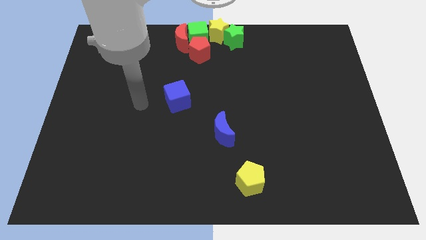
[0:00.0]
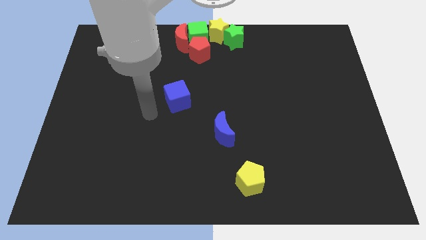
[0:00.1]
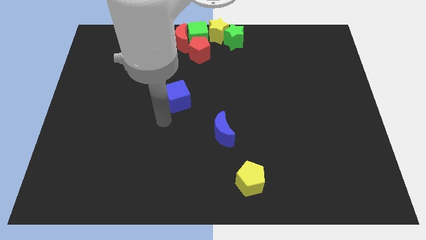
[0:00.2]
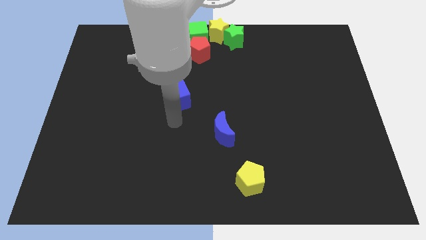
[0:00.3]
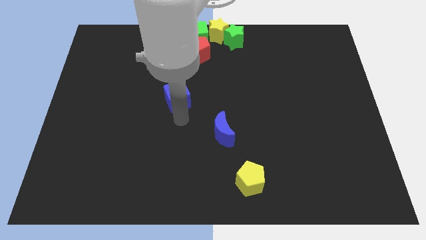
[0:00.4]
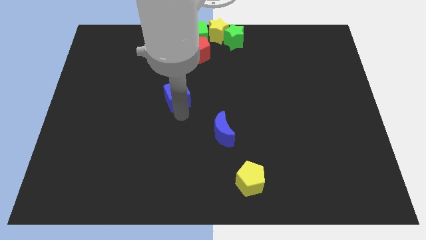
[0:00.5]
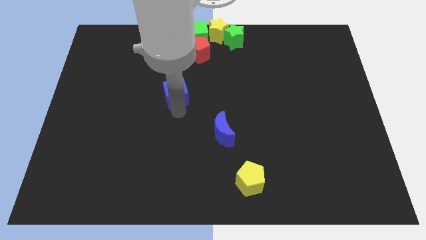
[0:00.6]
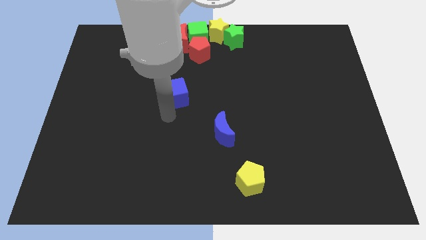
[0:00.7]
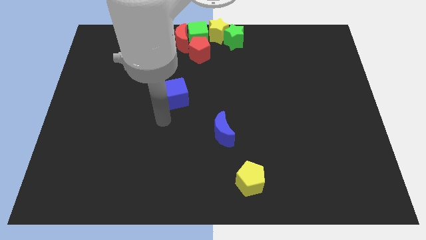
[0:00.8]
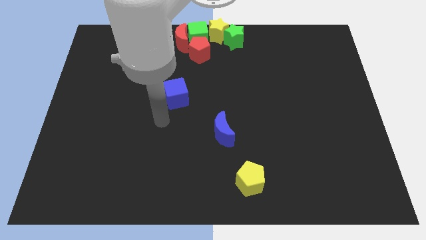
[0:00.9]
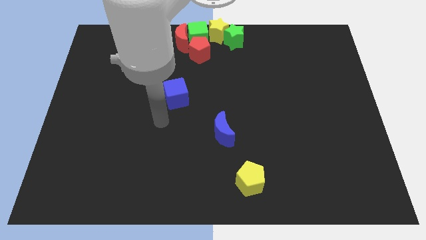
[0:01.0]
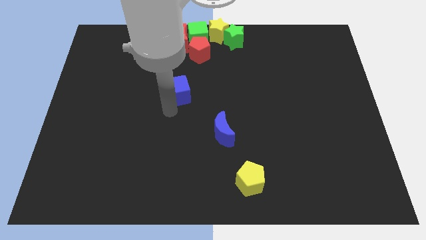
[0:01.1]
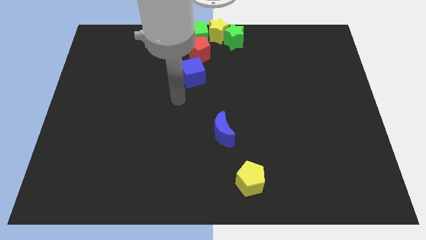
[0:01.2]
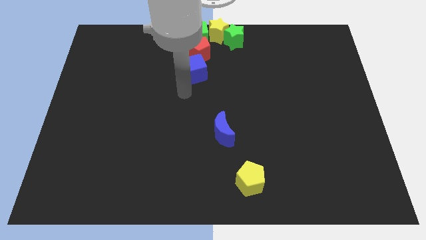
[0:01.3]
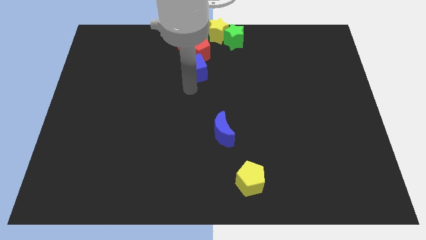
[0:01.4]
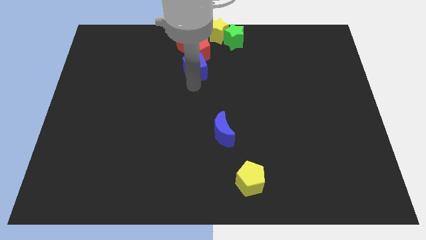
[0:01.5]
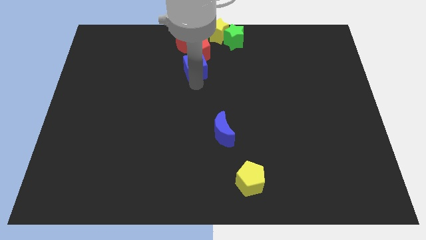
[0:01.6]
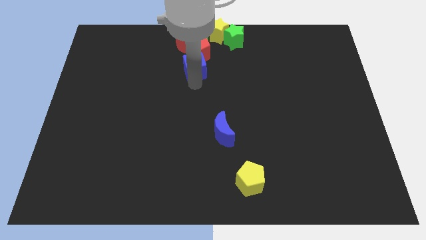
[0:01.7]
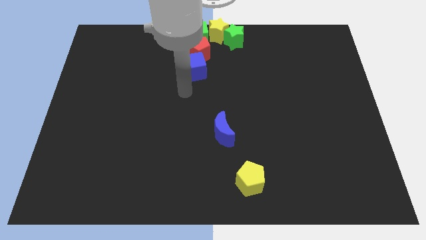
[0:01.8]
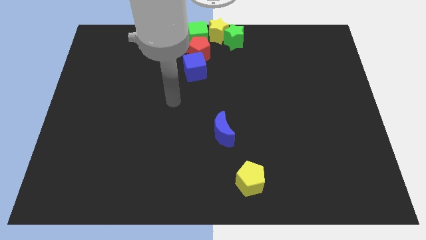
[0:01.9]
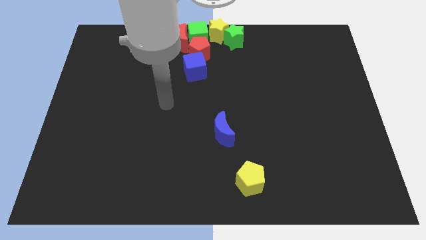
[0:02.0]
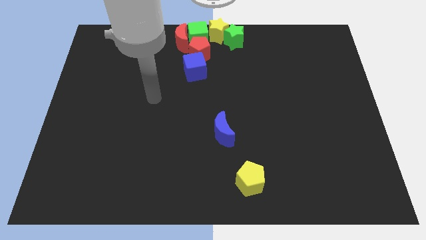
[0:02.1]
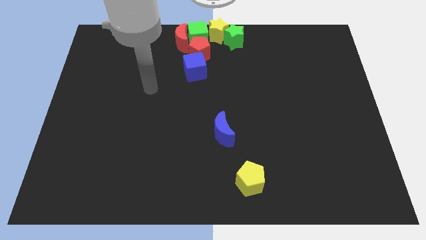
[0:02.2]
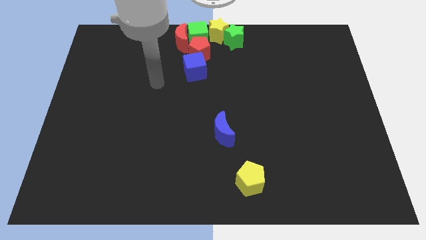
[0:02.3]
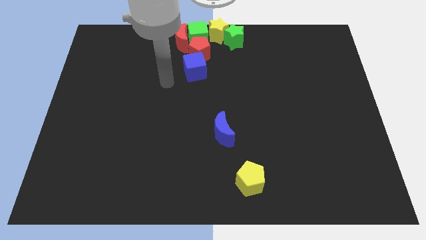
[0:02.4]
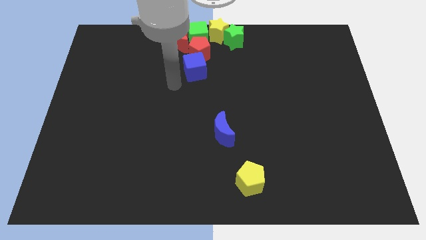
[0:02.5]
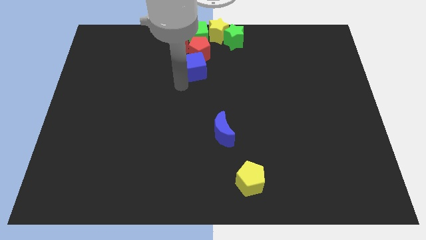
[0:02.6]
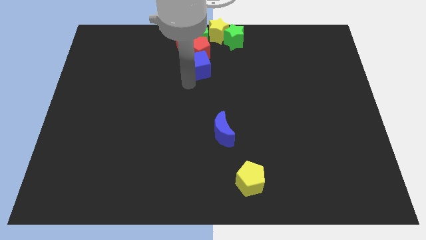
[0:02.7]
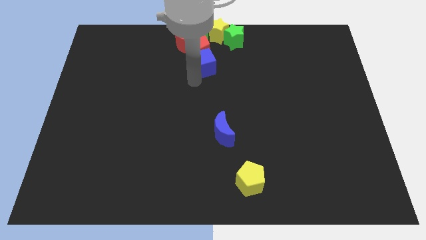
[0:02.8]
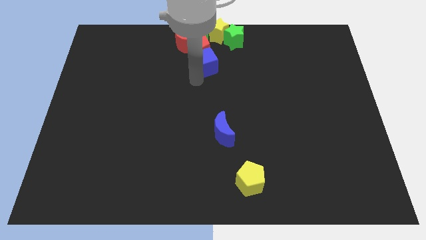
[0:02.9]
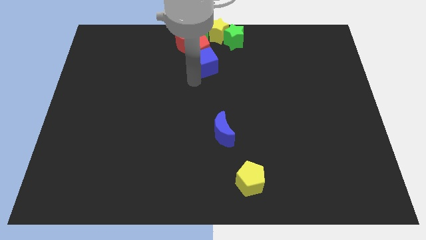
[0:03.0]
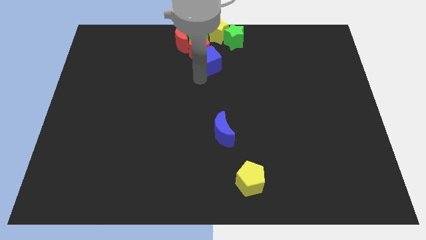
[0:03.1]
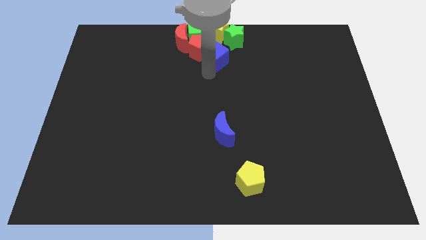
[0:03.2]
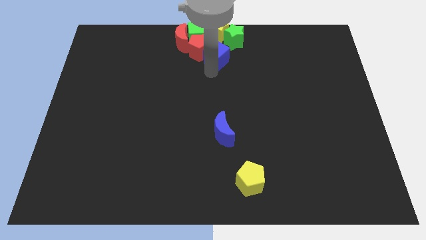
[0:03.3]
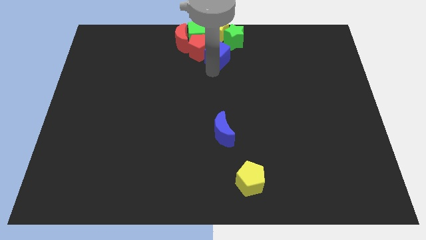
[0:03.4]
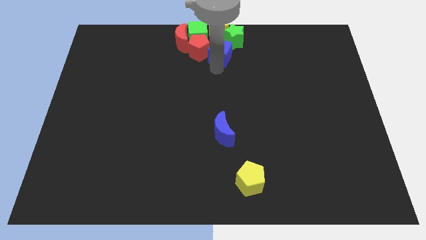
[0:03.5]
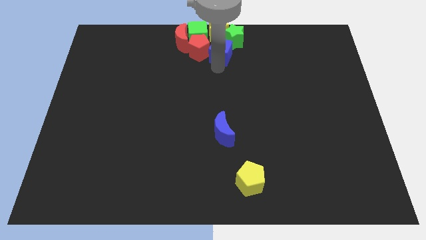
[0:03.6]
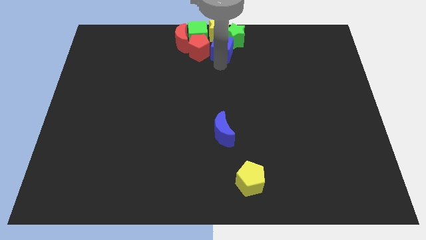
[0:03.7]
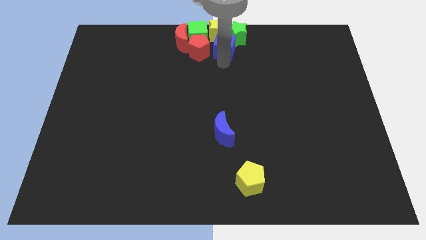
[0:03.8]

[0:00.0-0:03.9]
place the blue cube to the right of the red pentagon

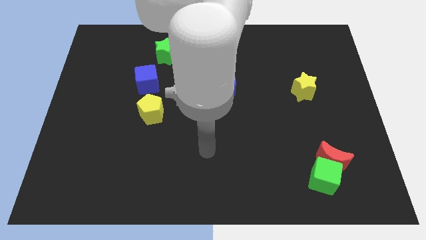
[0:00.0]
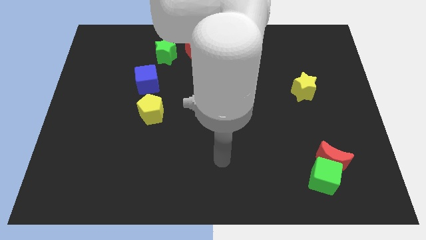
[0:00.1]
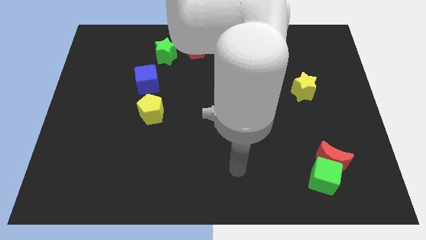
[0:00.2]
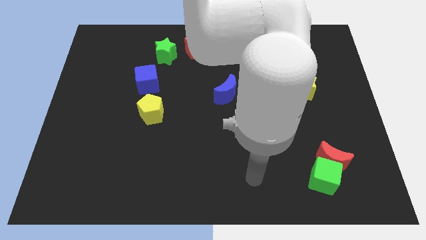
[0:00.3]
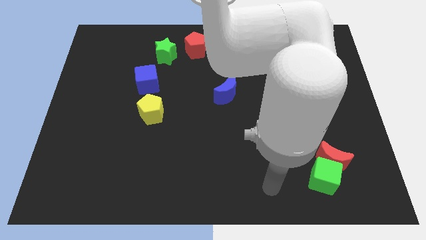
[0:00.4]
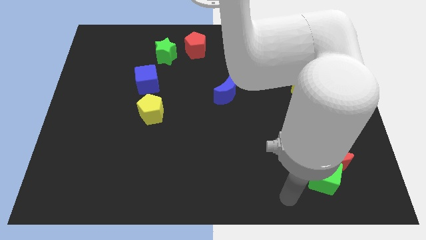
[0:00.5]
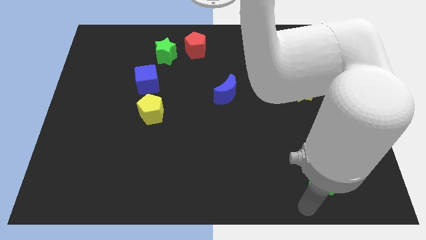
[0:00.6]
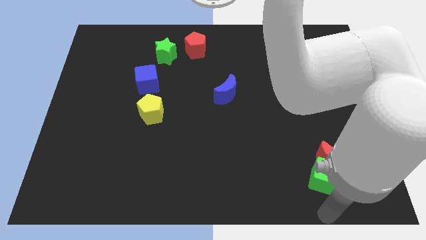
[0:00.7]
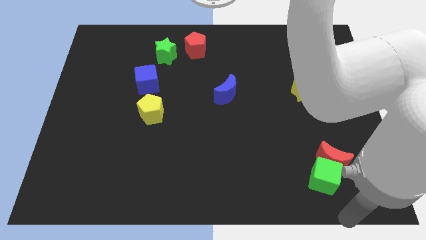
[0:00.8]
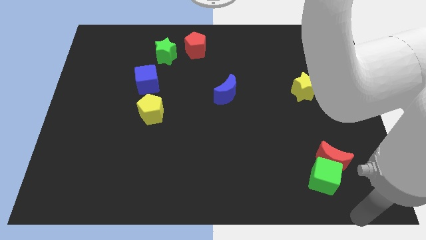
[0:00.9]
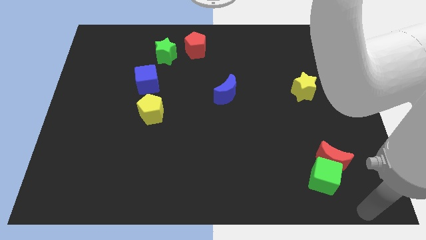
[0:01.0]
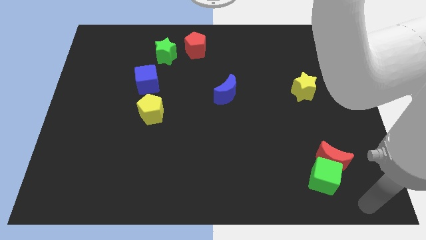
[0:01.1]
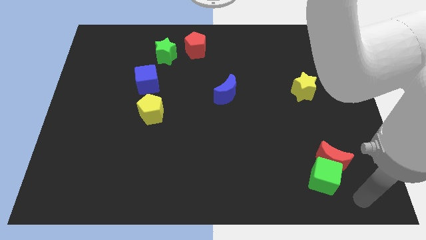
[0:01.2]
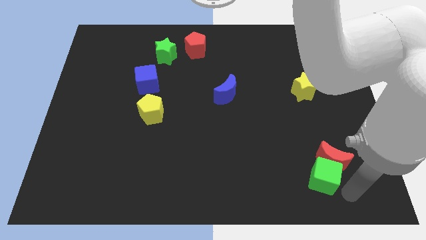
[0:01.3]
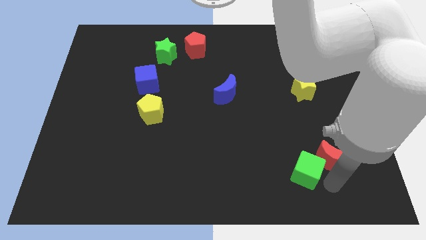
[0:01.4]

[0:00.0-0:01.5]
move your arm near to the green cube

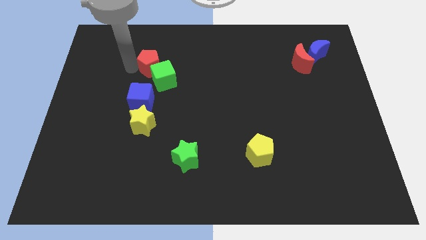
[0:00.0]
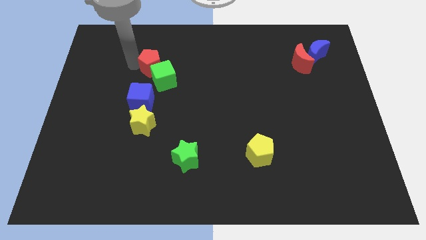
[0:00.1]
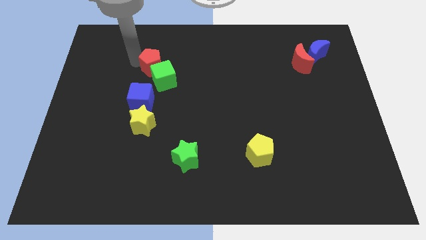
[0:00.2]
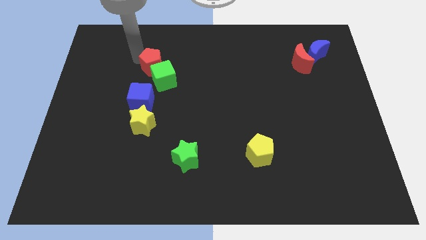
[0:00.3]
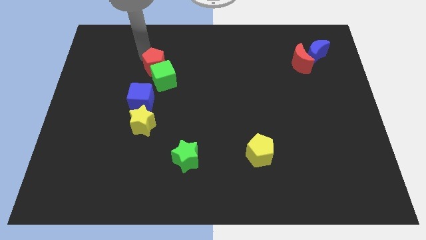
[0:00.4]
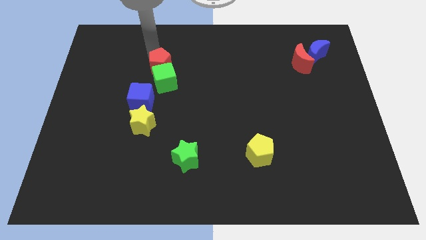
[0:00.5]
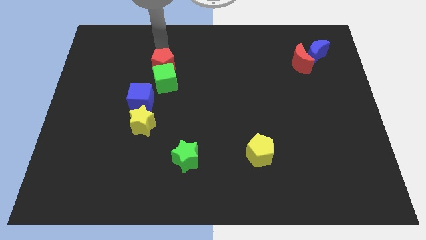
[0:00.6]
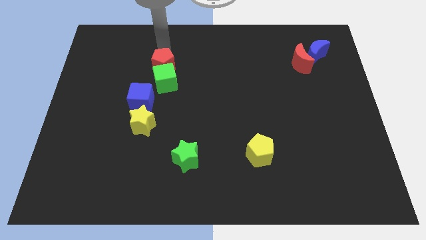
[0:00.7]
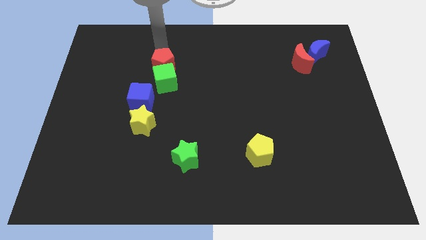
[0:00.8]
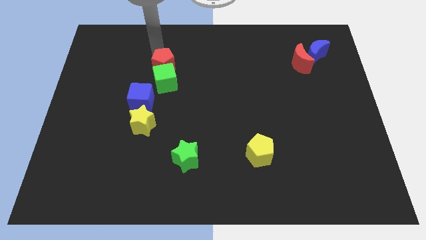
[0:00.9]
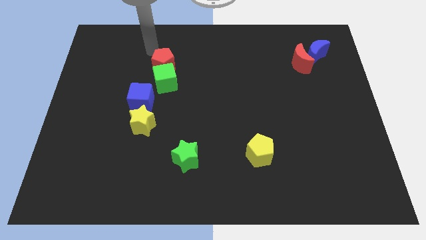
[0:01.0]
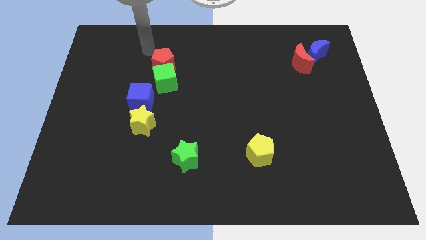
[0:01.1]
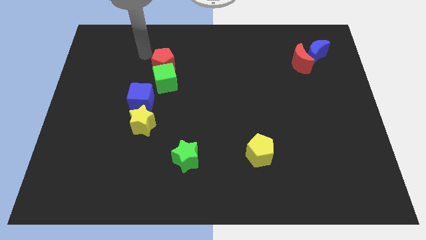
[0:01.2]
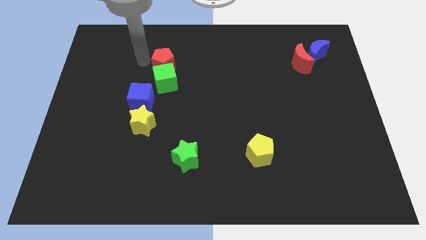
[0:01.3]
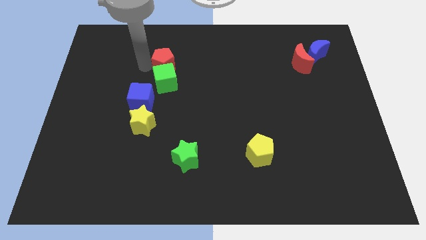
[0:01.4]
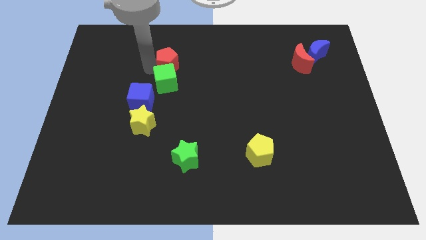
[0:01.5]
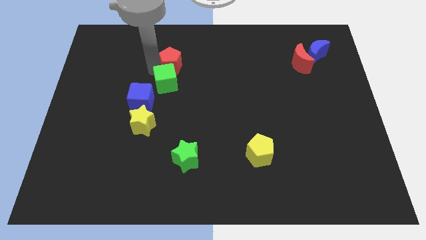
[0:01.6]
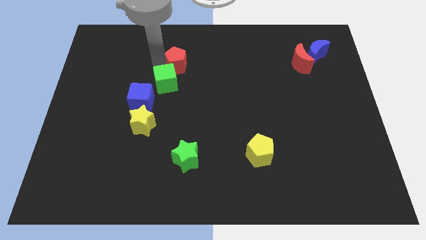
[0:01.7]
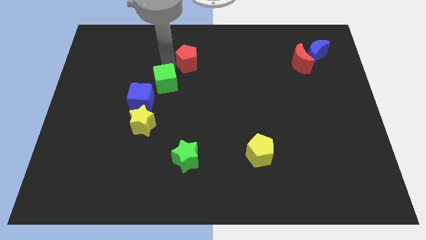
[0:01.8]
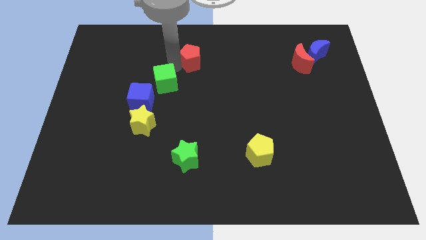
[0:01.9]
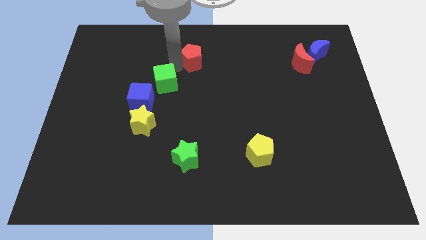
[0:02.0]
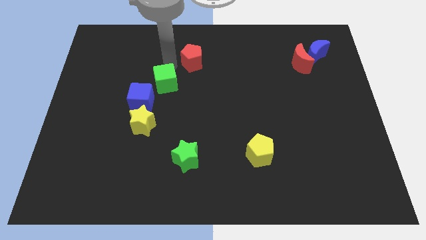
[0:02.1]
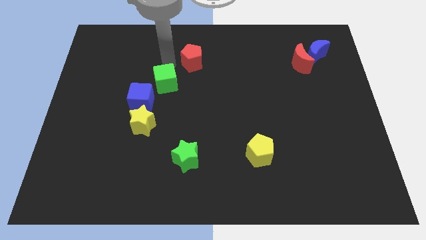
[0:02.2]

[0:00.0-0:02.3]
separate red pentagon away from green cube

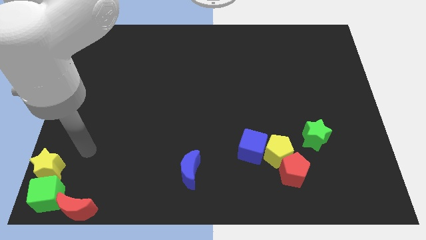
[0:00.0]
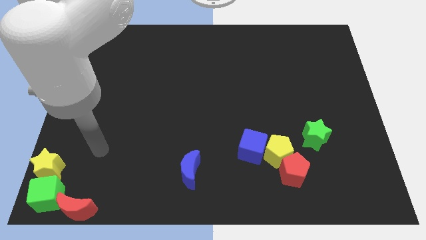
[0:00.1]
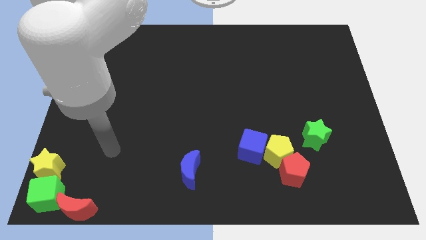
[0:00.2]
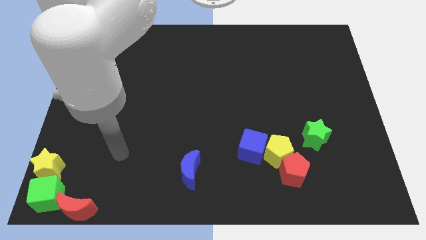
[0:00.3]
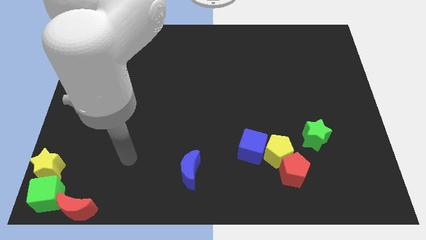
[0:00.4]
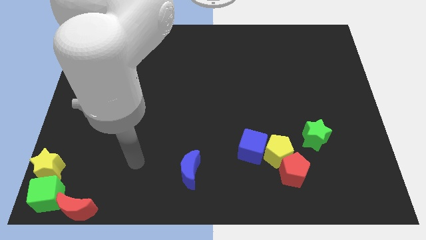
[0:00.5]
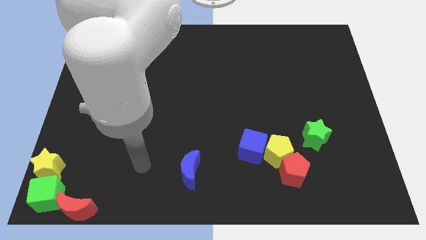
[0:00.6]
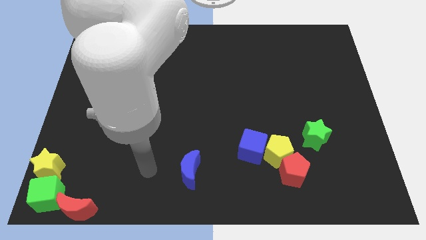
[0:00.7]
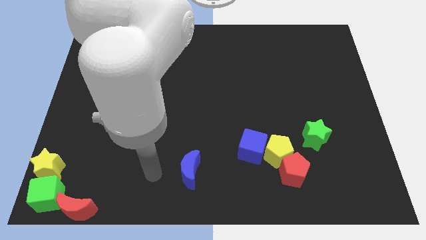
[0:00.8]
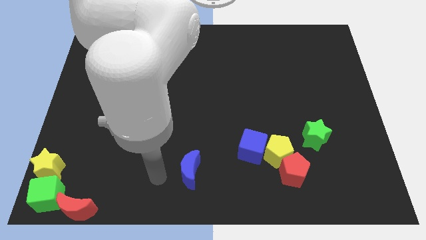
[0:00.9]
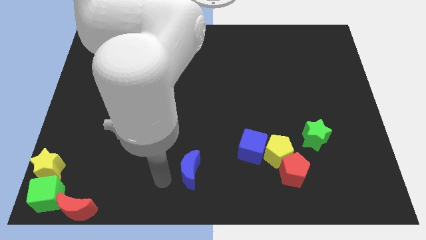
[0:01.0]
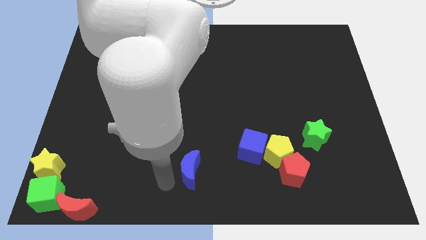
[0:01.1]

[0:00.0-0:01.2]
move the arm towards the blue crescent
